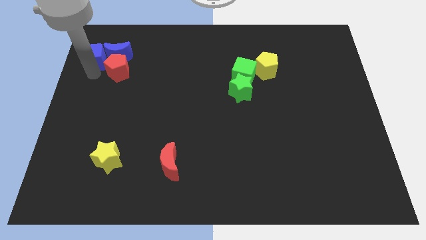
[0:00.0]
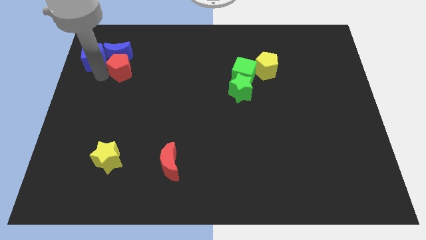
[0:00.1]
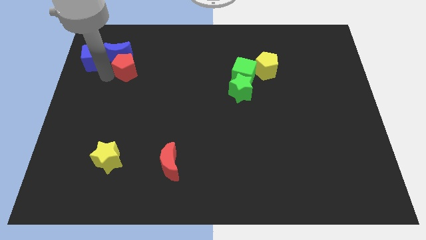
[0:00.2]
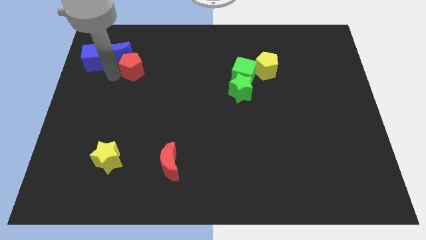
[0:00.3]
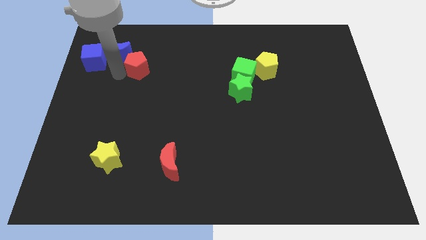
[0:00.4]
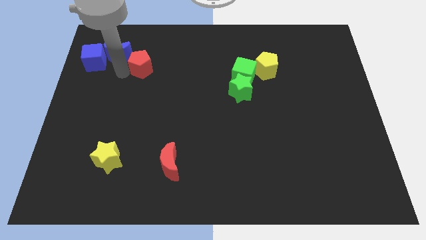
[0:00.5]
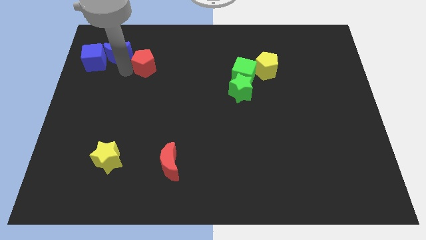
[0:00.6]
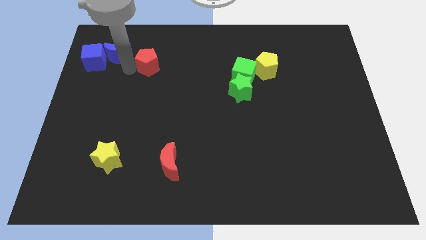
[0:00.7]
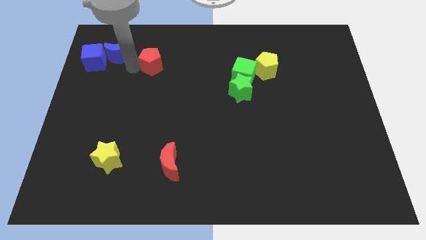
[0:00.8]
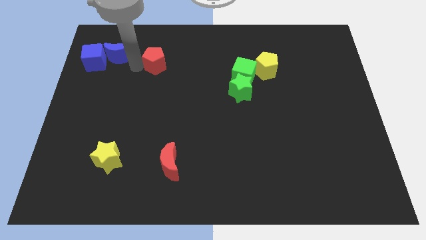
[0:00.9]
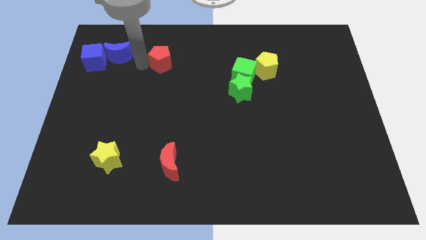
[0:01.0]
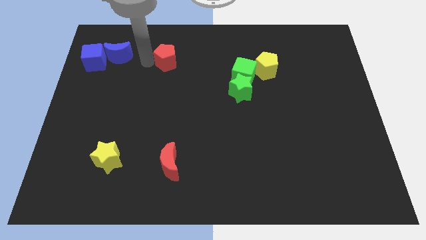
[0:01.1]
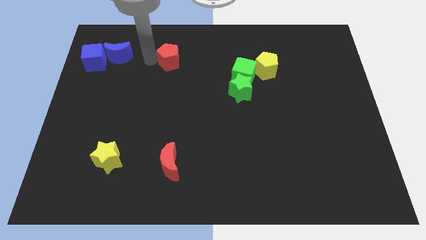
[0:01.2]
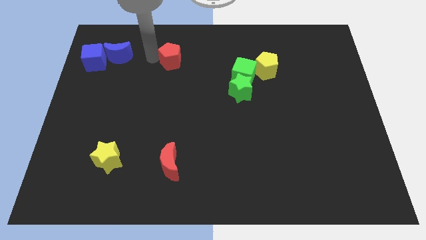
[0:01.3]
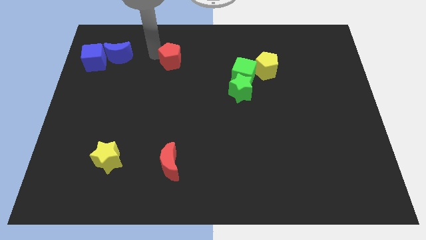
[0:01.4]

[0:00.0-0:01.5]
move the red pentagon to the right of blue moon

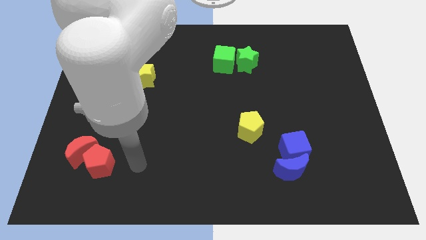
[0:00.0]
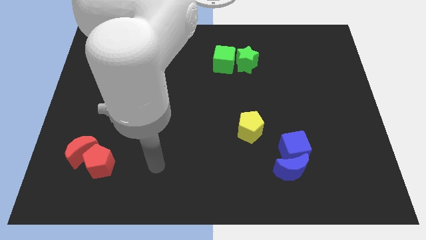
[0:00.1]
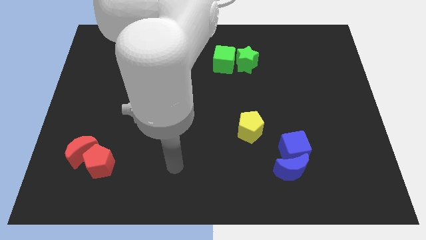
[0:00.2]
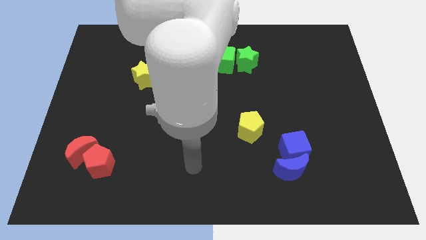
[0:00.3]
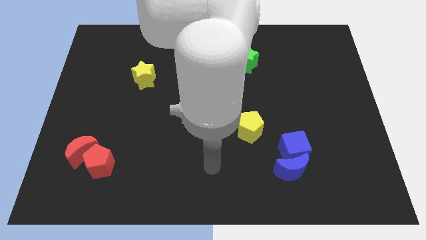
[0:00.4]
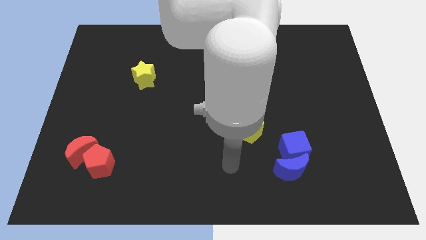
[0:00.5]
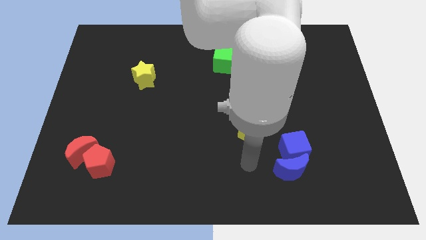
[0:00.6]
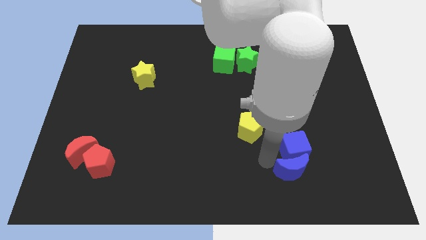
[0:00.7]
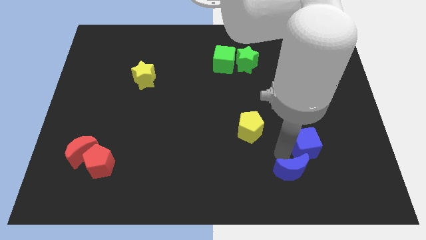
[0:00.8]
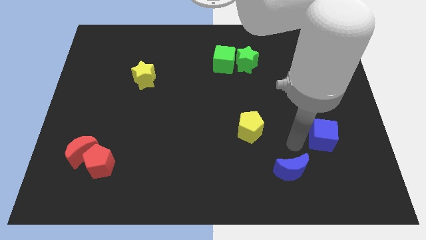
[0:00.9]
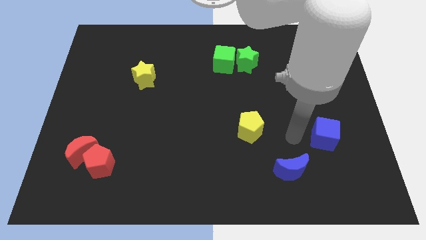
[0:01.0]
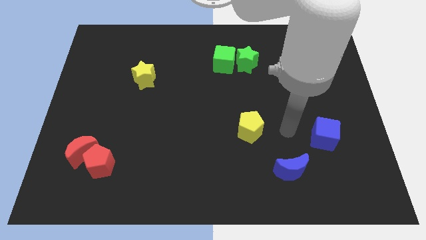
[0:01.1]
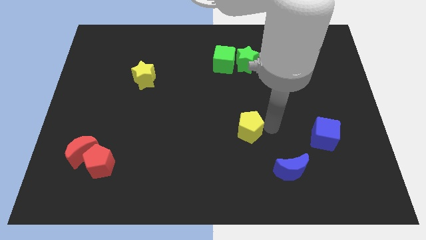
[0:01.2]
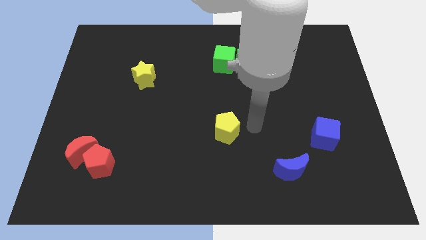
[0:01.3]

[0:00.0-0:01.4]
separate the blue cube from blue moon

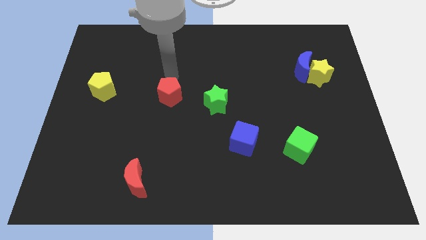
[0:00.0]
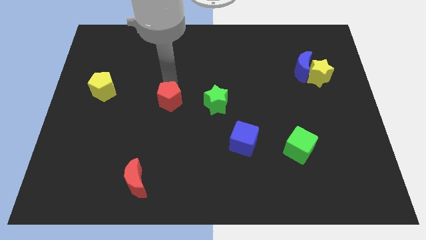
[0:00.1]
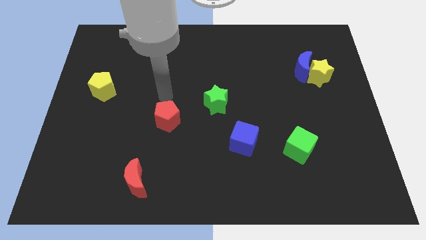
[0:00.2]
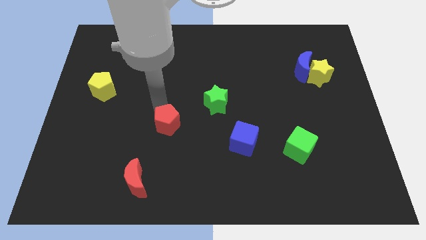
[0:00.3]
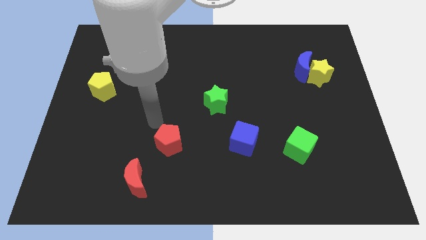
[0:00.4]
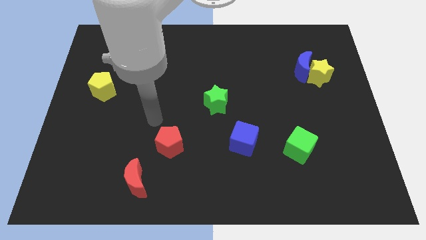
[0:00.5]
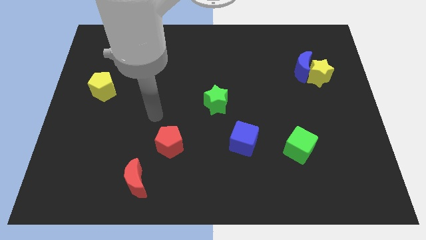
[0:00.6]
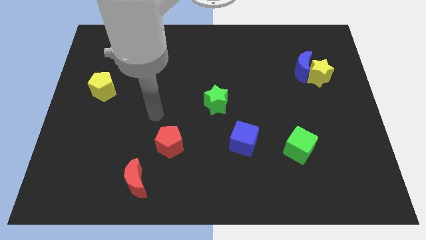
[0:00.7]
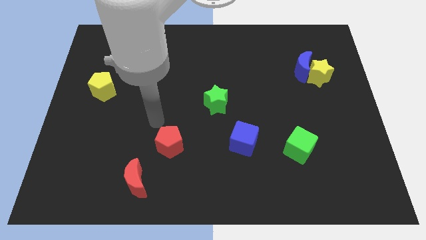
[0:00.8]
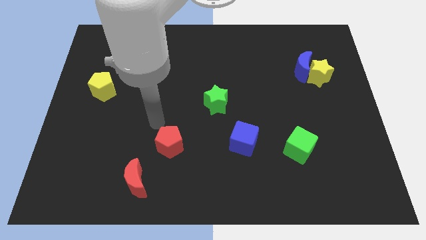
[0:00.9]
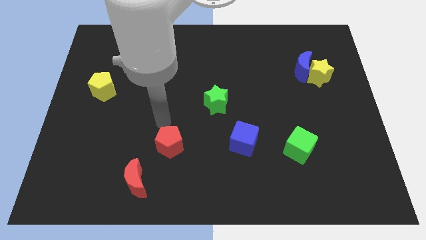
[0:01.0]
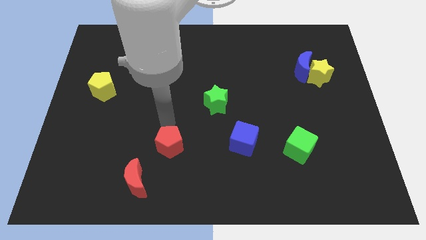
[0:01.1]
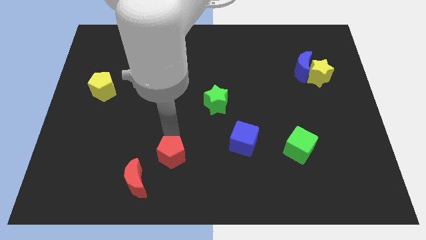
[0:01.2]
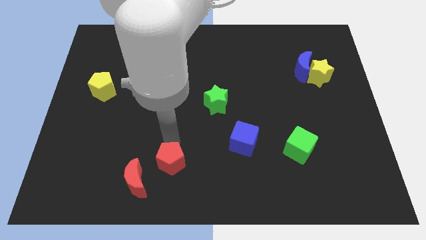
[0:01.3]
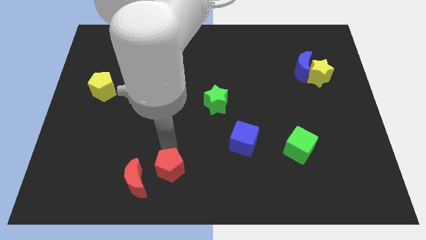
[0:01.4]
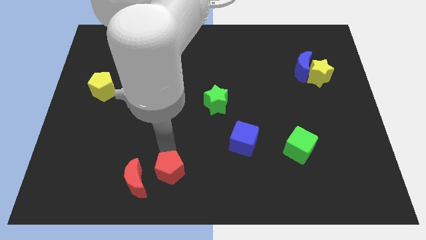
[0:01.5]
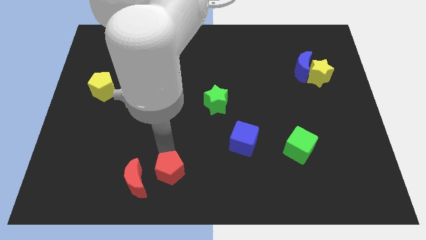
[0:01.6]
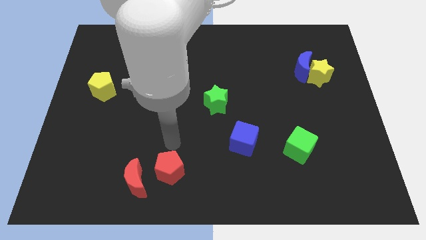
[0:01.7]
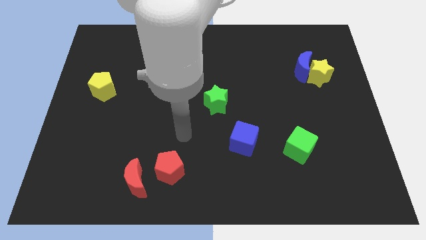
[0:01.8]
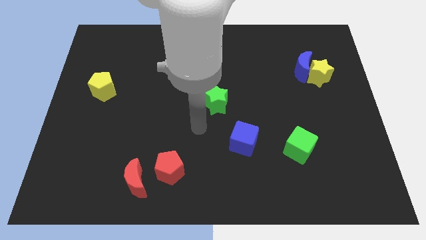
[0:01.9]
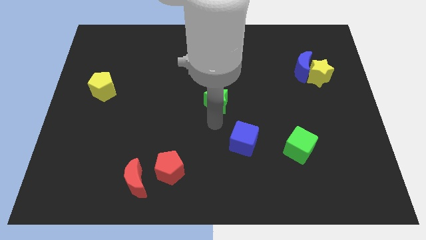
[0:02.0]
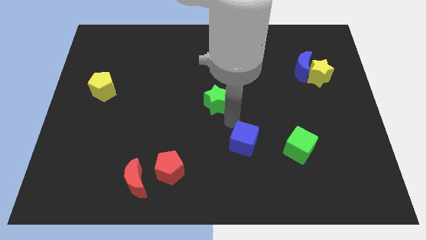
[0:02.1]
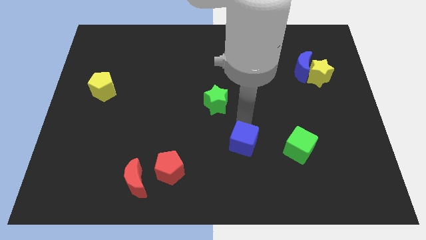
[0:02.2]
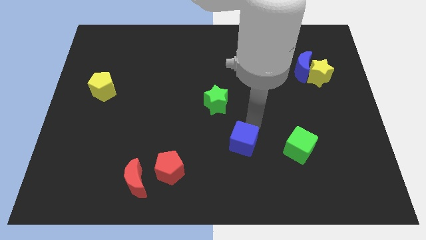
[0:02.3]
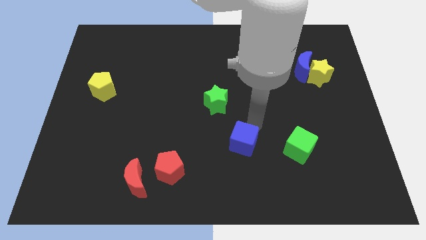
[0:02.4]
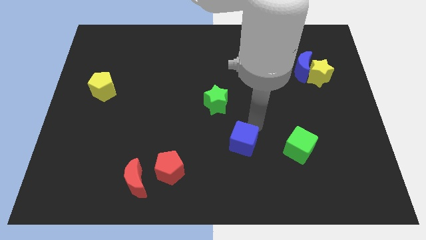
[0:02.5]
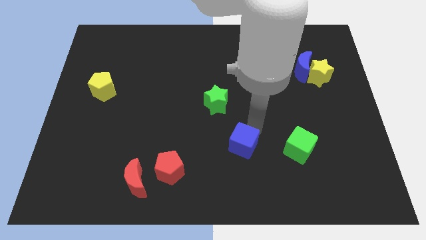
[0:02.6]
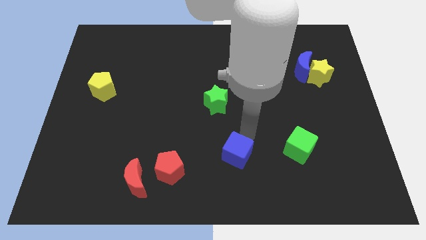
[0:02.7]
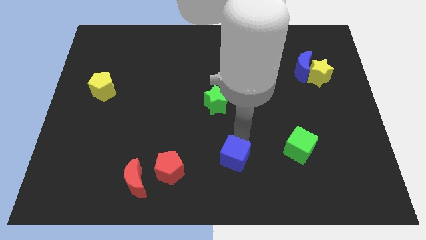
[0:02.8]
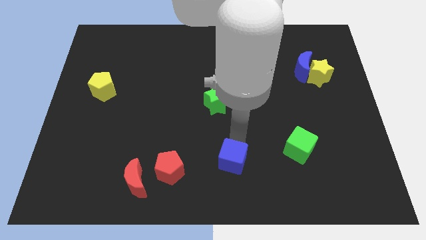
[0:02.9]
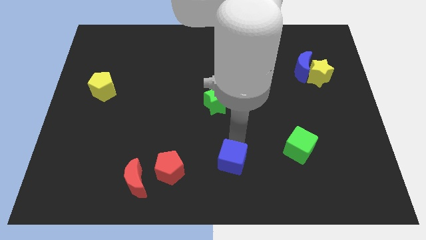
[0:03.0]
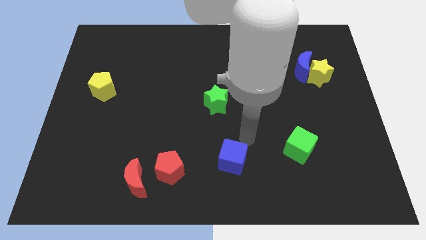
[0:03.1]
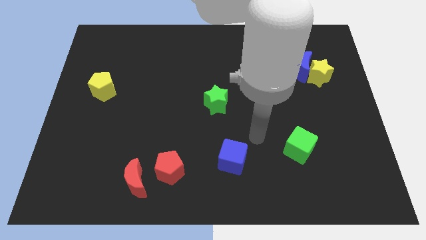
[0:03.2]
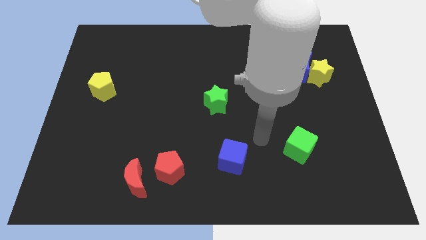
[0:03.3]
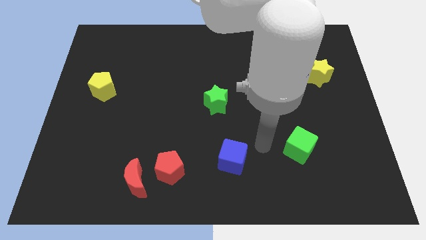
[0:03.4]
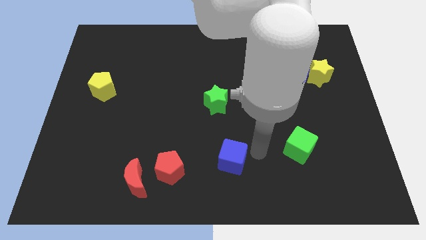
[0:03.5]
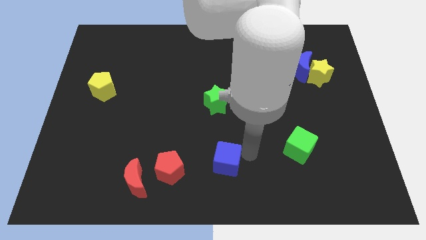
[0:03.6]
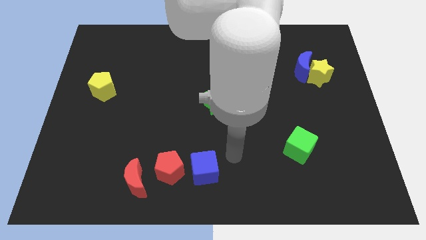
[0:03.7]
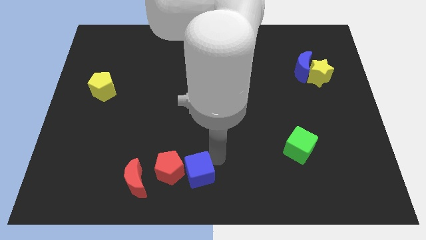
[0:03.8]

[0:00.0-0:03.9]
place the red pentagon and blue cube to the right side of the red crescent

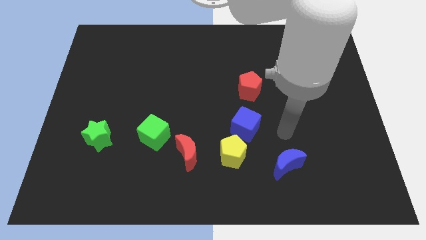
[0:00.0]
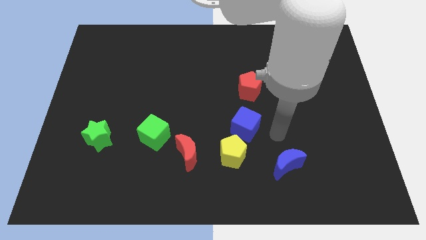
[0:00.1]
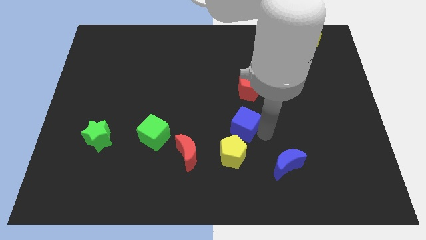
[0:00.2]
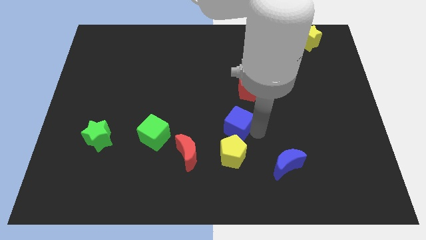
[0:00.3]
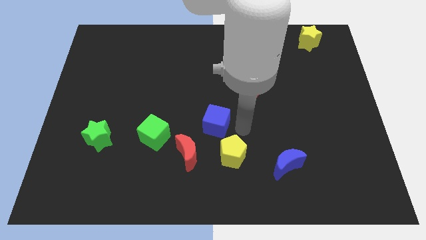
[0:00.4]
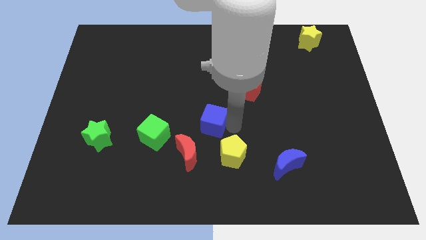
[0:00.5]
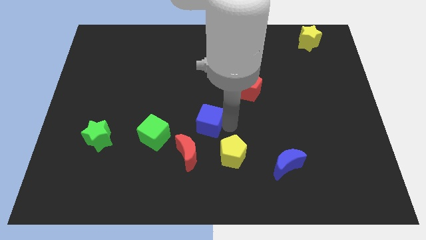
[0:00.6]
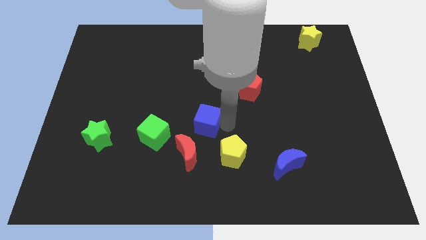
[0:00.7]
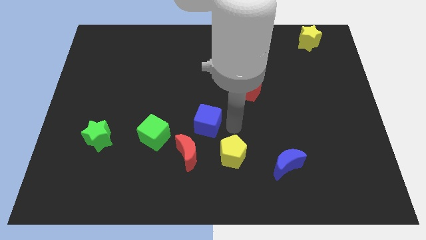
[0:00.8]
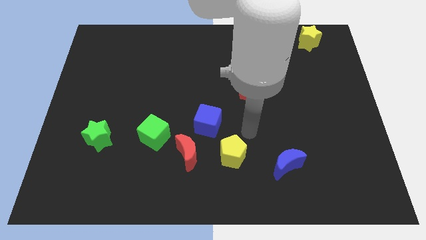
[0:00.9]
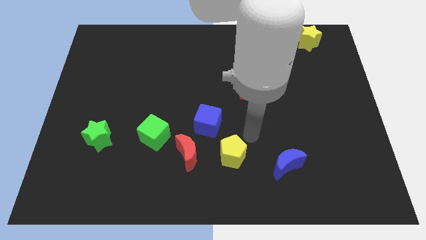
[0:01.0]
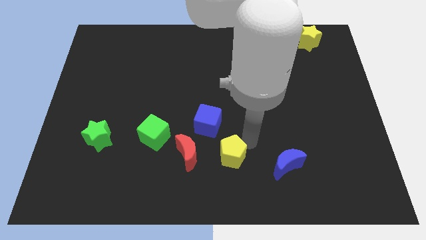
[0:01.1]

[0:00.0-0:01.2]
push the blue cube to the left

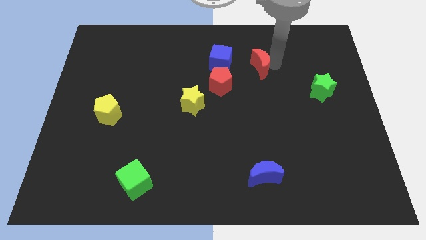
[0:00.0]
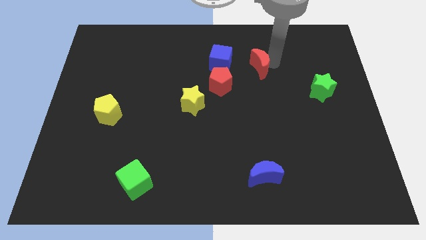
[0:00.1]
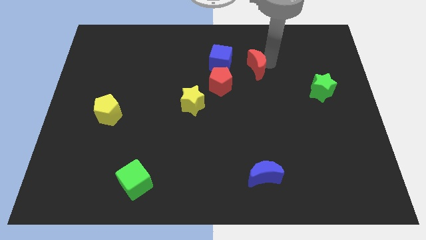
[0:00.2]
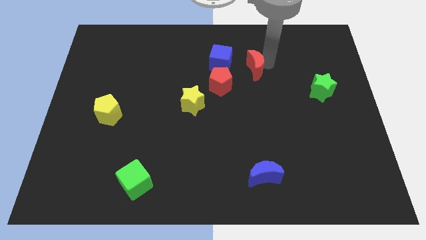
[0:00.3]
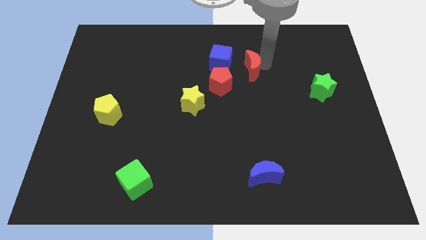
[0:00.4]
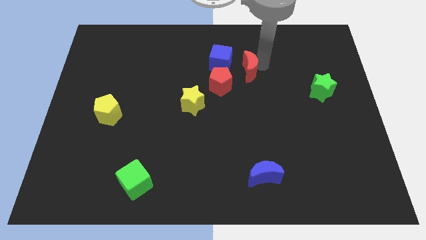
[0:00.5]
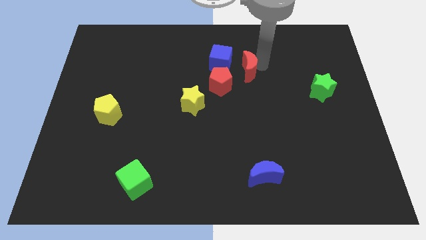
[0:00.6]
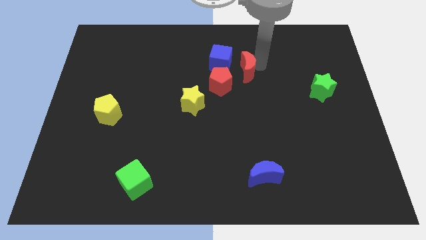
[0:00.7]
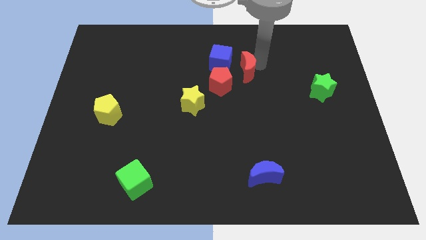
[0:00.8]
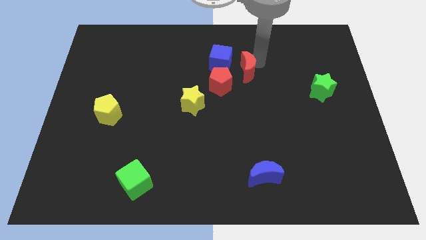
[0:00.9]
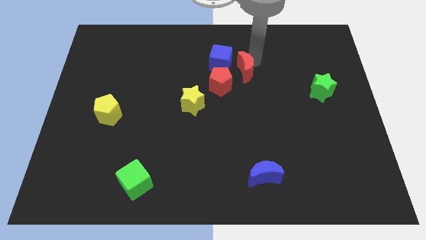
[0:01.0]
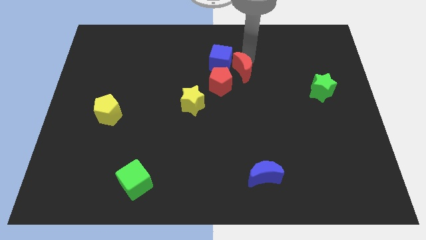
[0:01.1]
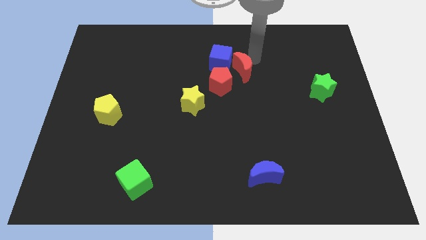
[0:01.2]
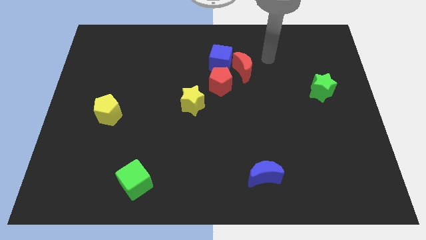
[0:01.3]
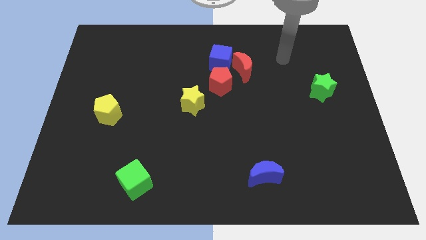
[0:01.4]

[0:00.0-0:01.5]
make the red moon touch the blue cube
